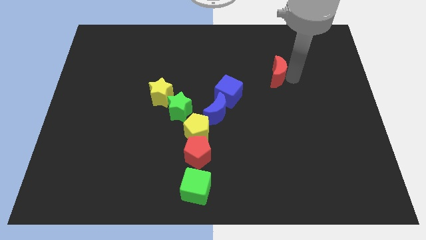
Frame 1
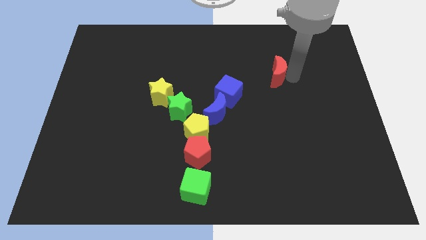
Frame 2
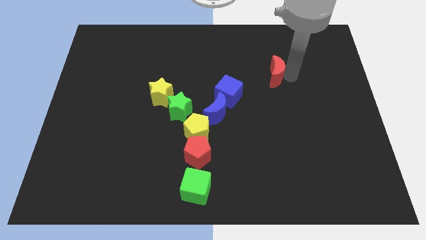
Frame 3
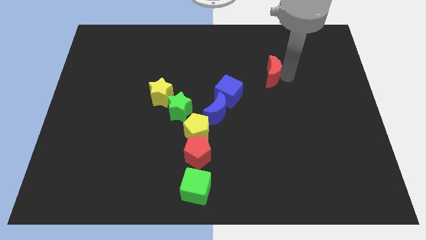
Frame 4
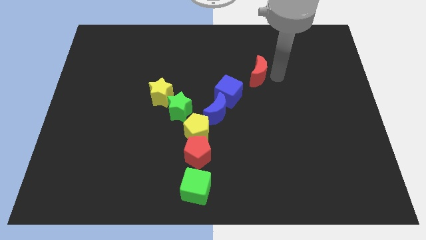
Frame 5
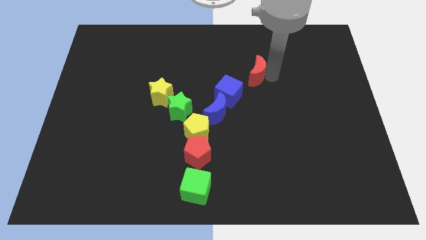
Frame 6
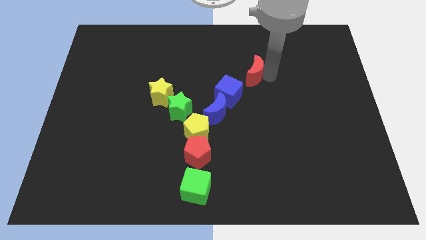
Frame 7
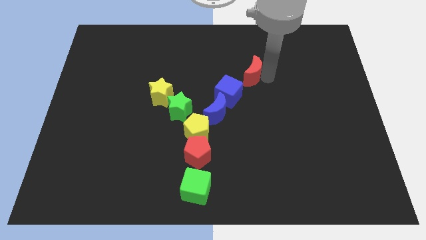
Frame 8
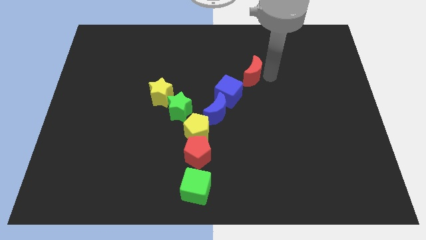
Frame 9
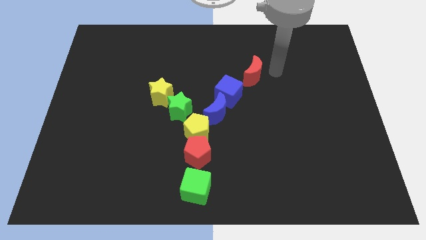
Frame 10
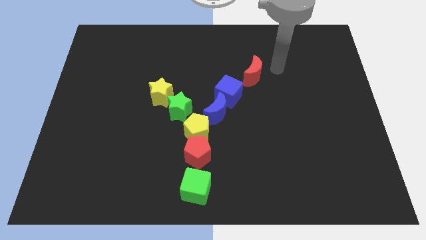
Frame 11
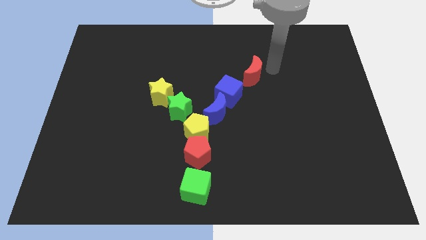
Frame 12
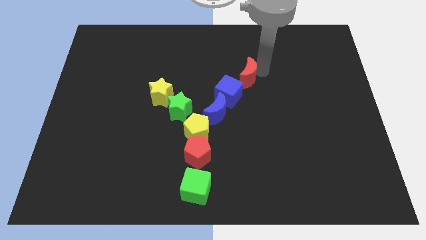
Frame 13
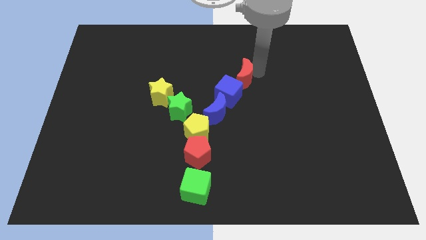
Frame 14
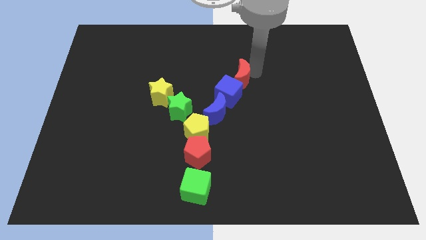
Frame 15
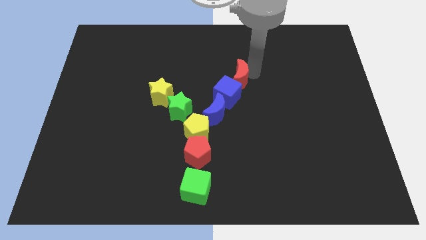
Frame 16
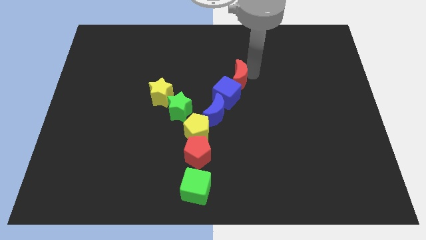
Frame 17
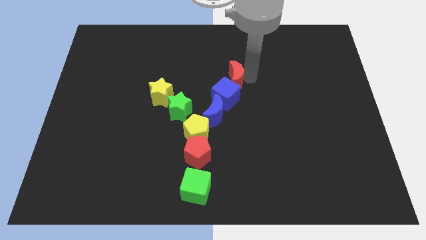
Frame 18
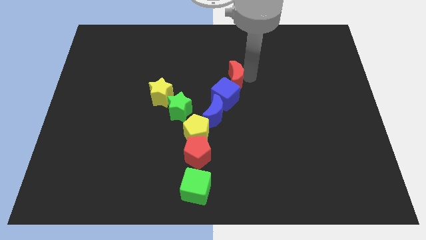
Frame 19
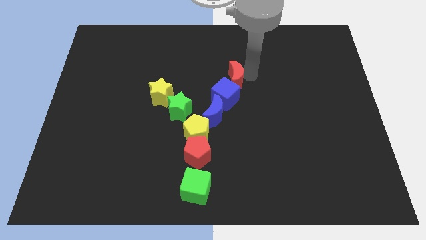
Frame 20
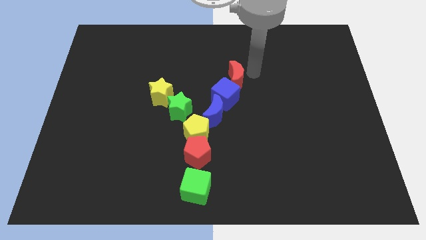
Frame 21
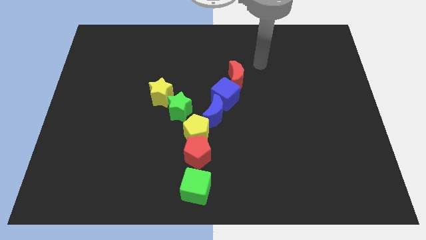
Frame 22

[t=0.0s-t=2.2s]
move red moon close to blue cube

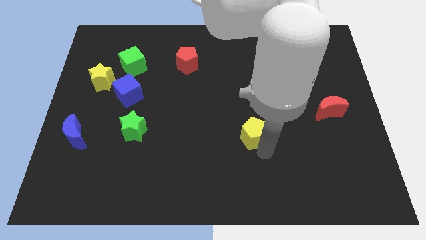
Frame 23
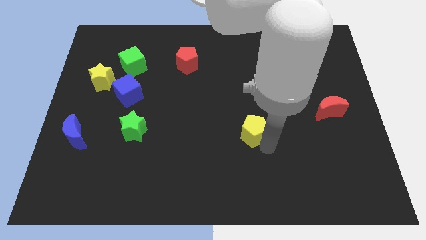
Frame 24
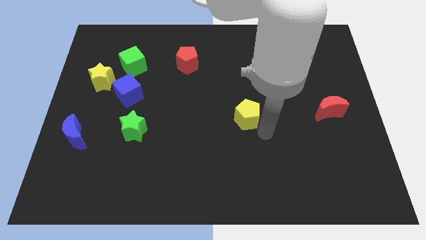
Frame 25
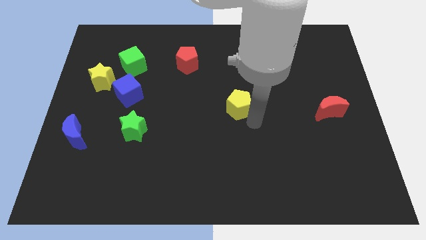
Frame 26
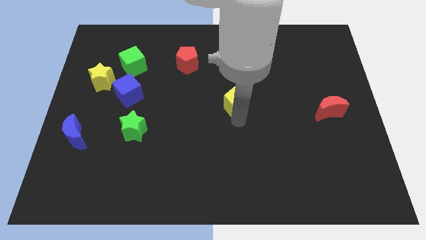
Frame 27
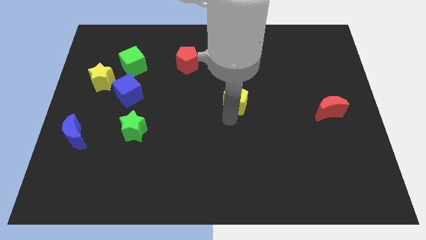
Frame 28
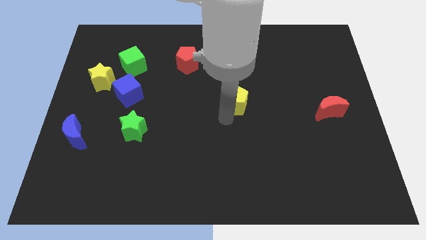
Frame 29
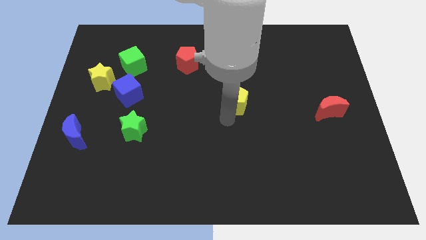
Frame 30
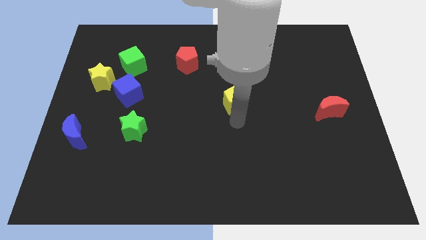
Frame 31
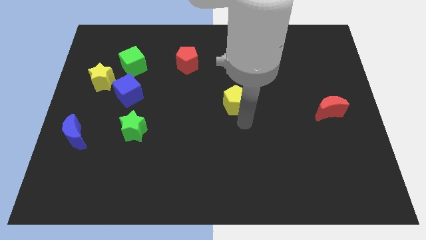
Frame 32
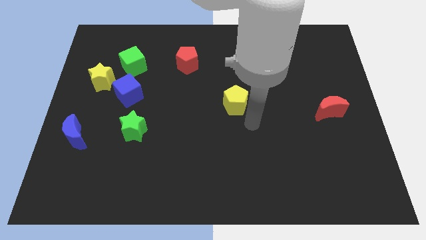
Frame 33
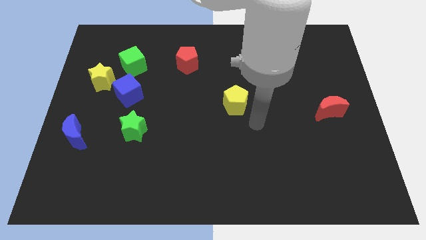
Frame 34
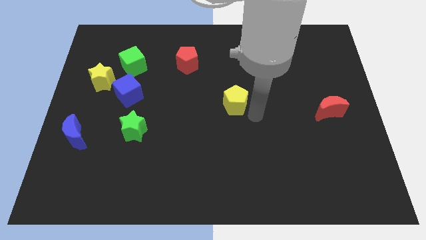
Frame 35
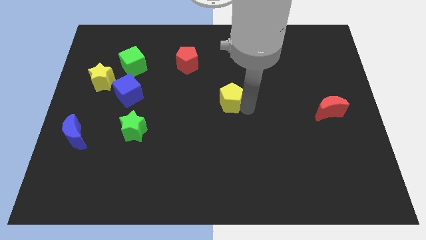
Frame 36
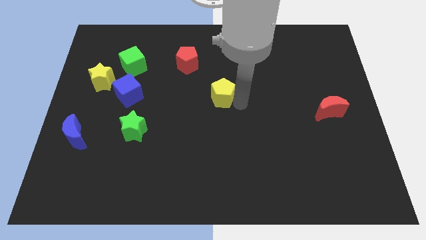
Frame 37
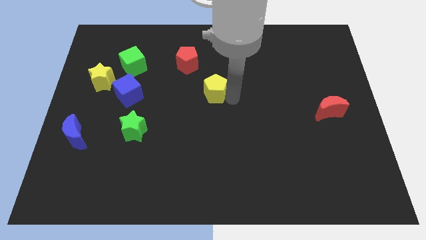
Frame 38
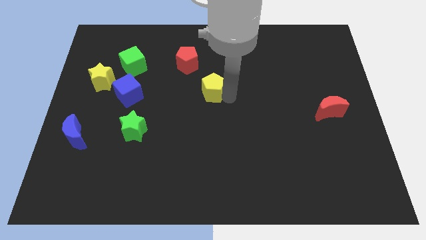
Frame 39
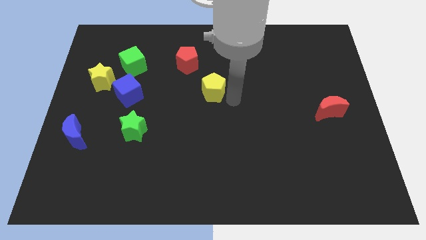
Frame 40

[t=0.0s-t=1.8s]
move the yellow pentagon diagonally on the bottom right side of the red pentagon

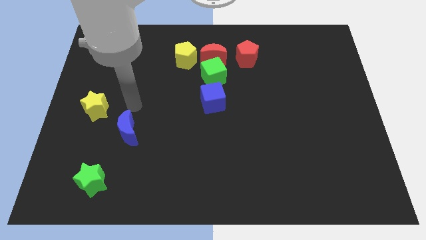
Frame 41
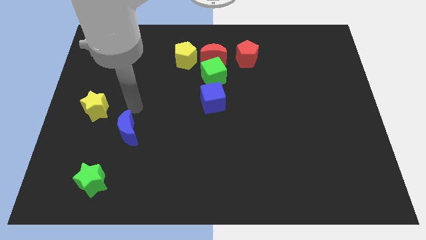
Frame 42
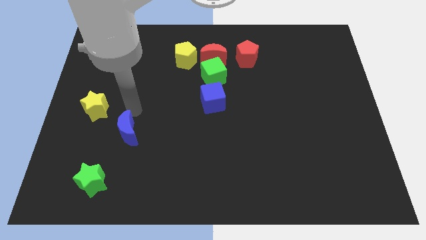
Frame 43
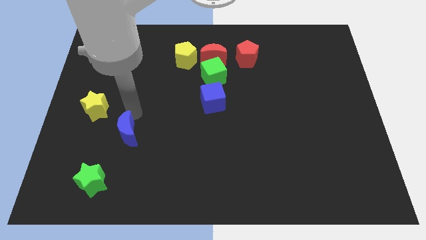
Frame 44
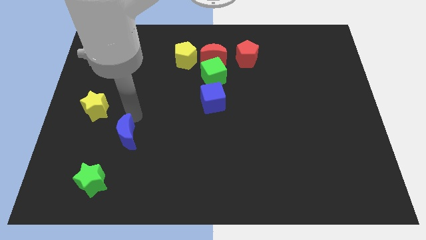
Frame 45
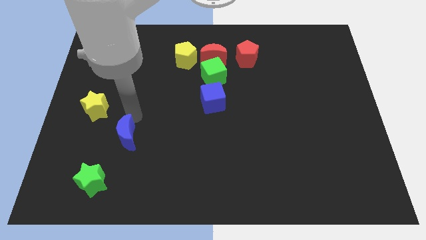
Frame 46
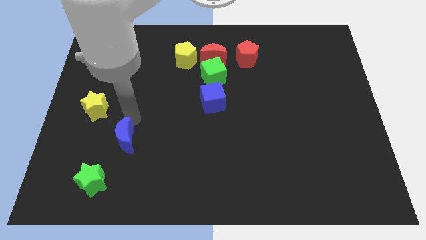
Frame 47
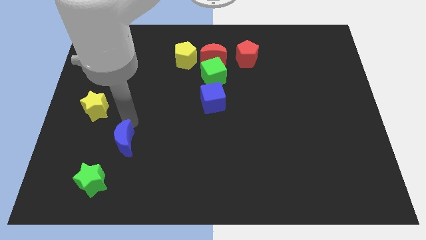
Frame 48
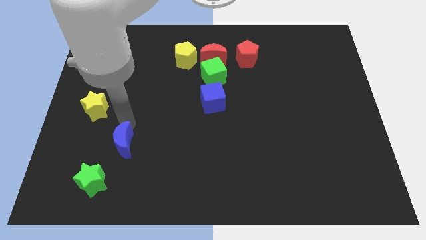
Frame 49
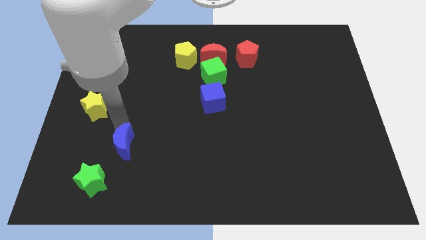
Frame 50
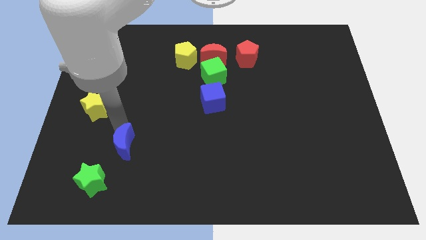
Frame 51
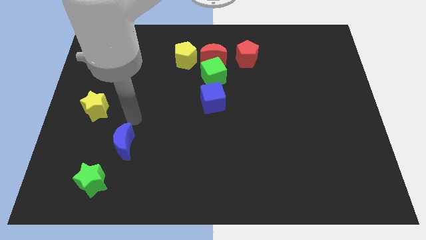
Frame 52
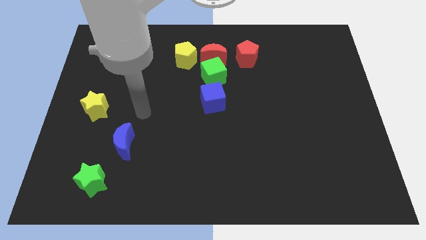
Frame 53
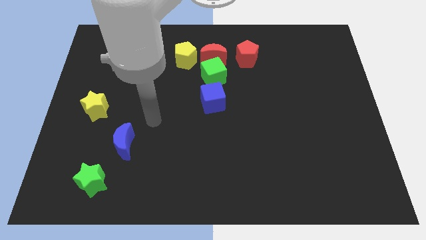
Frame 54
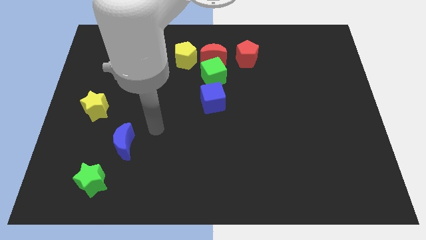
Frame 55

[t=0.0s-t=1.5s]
place the blue moon diagonally to blue cube

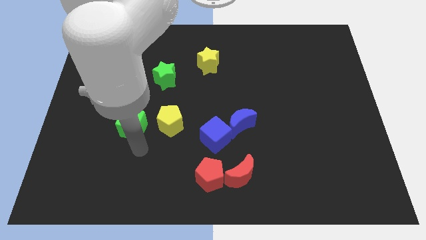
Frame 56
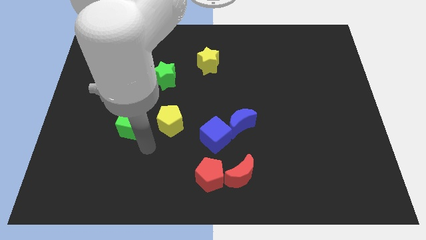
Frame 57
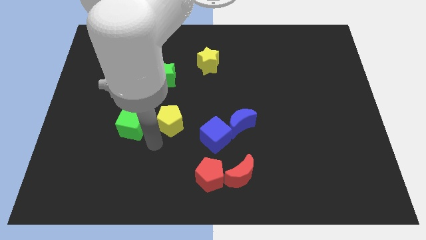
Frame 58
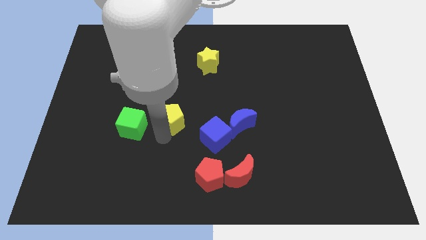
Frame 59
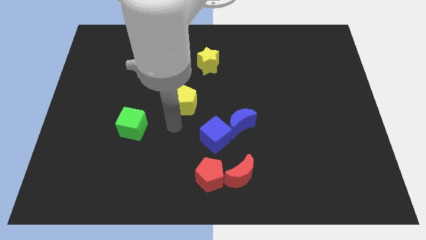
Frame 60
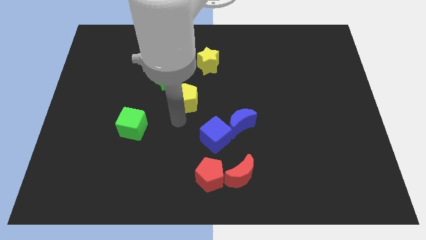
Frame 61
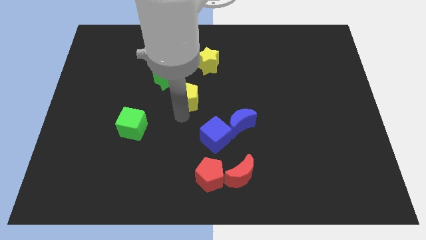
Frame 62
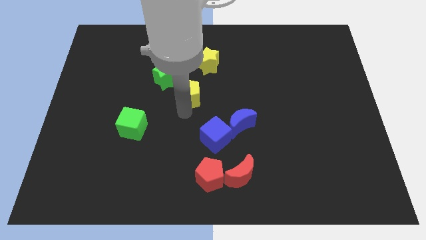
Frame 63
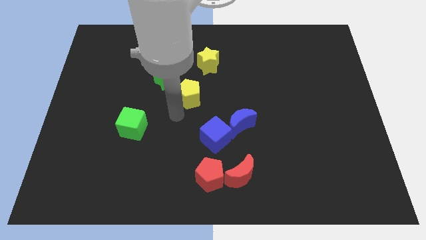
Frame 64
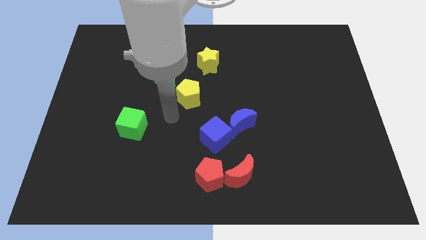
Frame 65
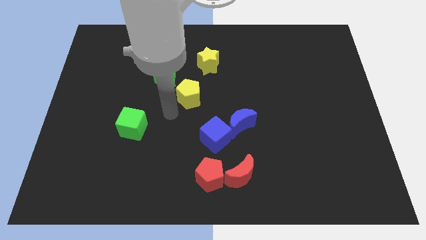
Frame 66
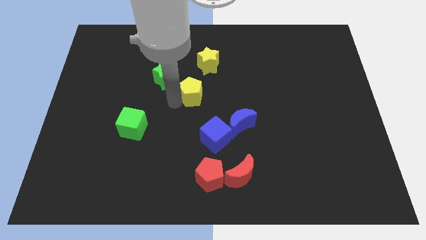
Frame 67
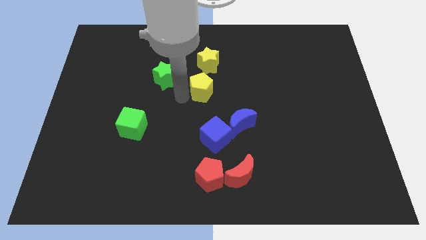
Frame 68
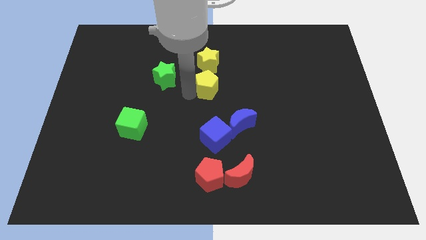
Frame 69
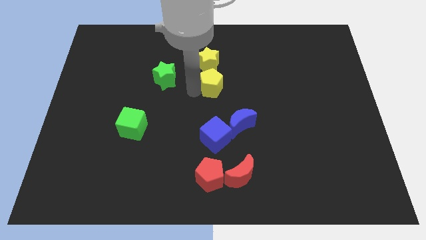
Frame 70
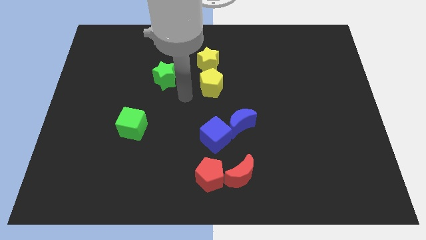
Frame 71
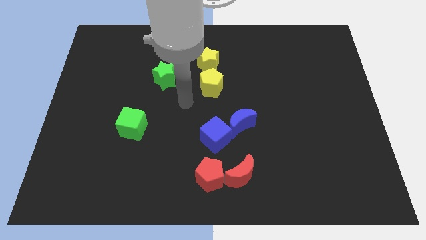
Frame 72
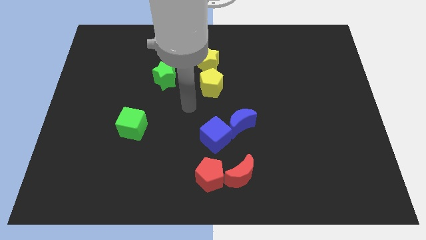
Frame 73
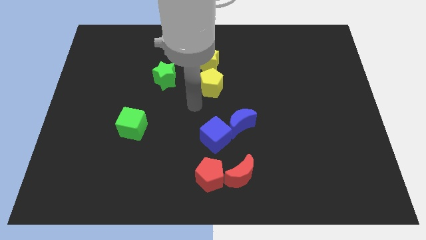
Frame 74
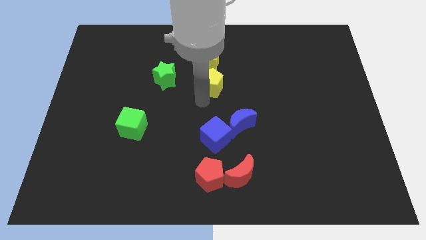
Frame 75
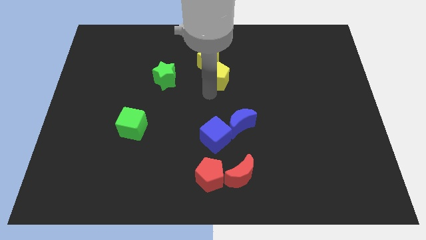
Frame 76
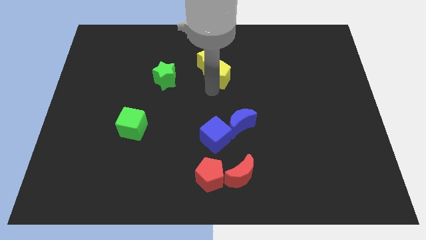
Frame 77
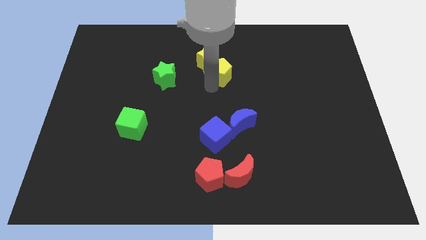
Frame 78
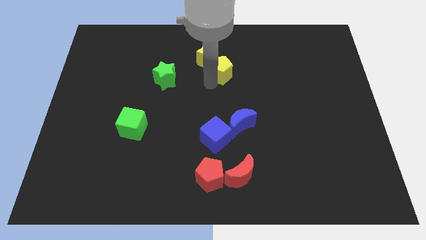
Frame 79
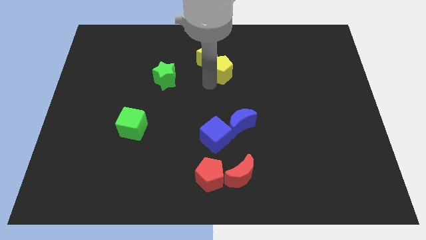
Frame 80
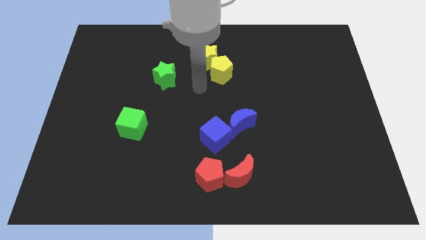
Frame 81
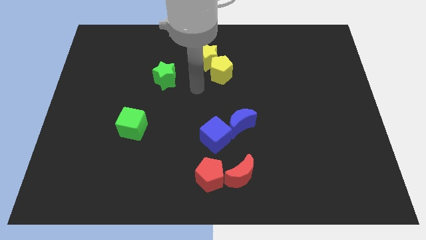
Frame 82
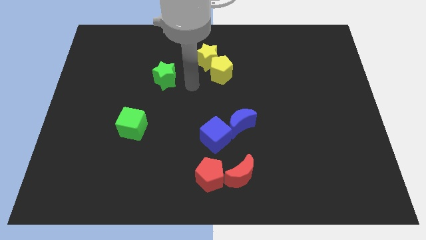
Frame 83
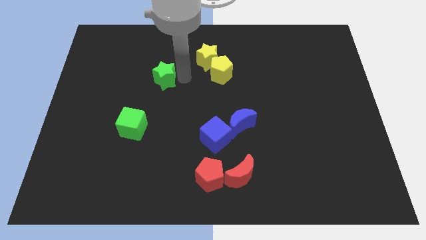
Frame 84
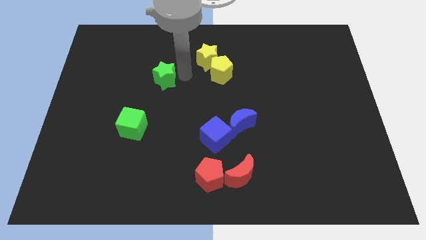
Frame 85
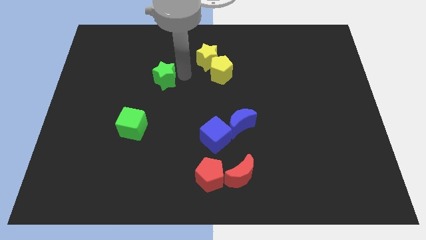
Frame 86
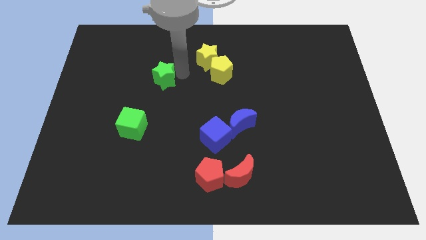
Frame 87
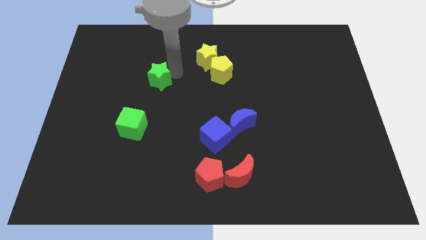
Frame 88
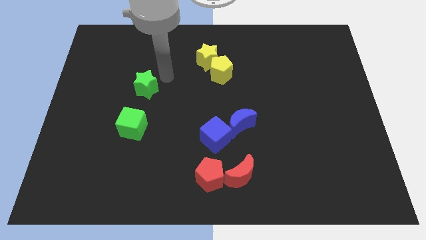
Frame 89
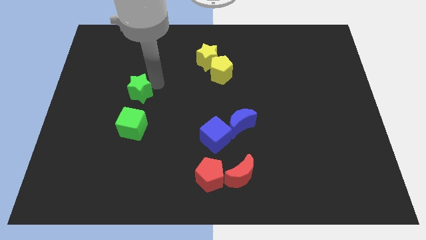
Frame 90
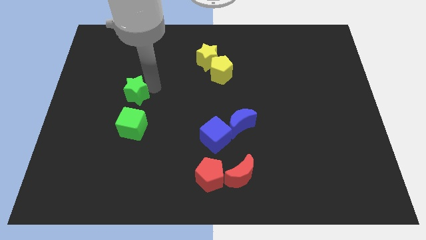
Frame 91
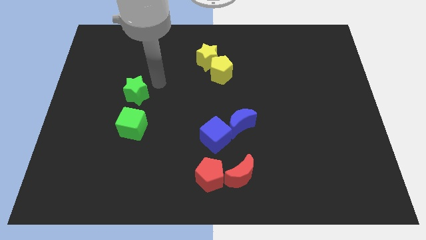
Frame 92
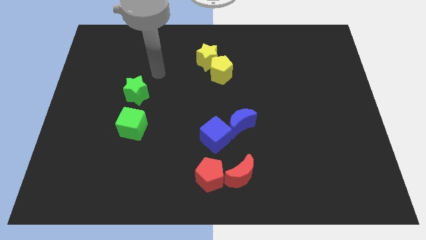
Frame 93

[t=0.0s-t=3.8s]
place the green star above the green cube
